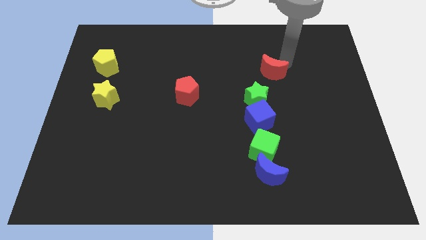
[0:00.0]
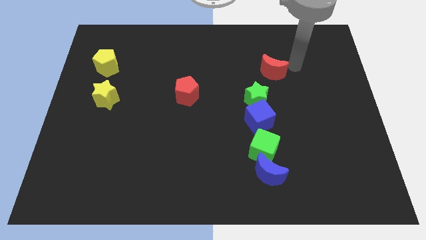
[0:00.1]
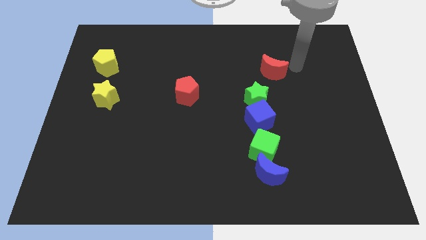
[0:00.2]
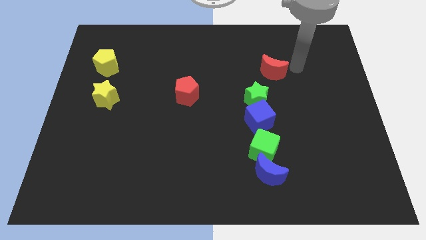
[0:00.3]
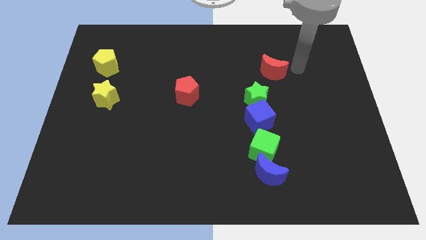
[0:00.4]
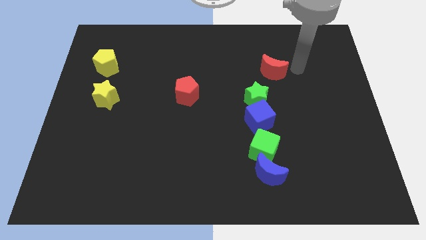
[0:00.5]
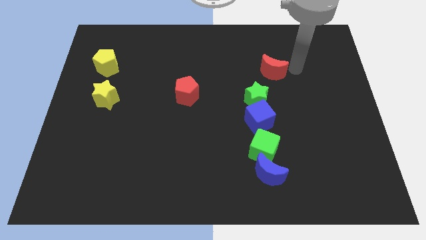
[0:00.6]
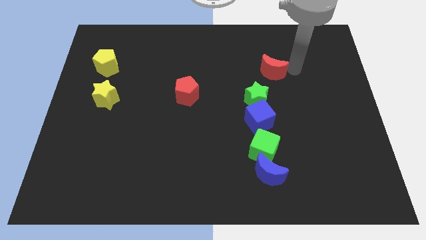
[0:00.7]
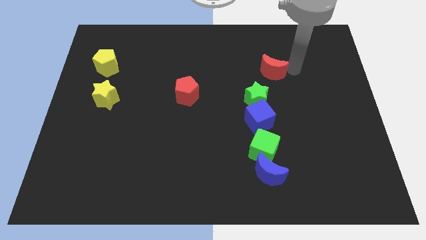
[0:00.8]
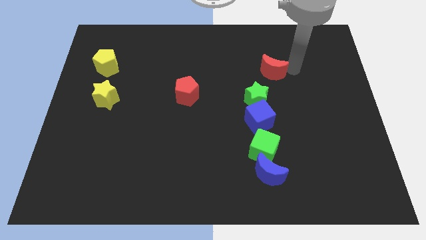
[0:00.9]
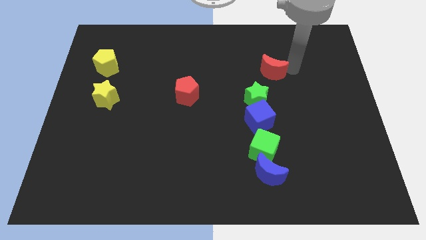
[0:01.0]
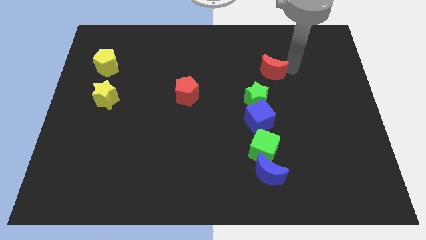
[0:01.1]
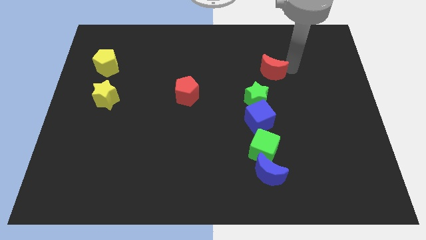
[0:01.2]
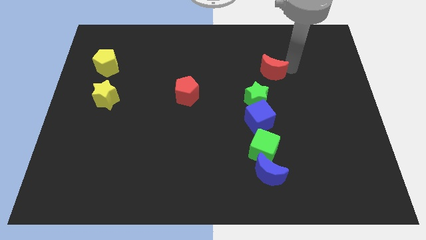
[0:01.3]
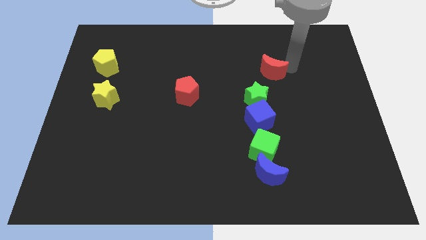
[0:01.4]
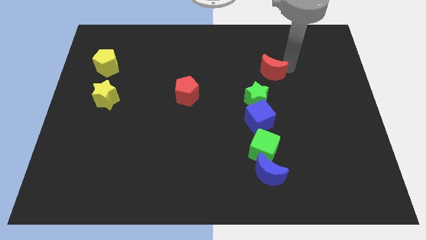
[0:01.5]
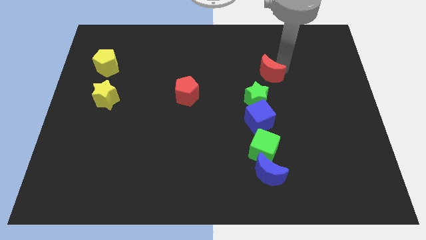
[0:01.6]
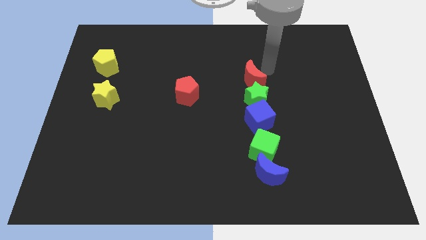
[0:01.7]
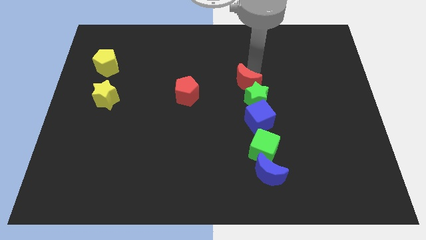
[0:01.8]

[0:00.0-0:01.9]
slide the red moon above the green star

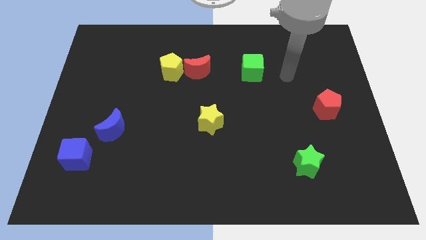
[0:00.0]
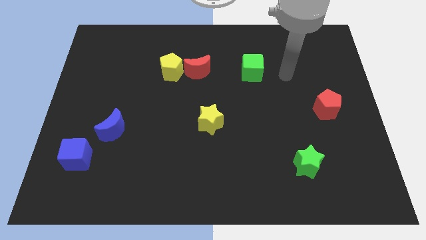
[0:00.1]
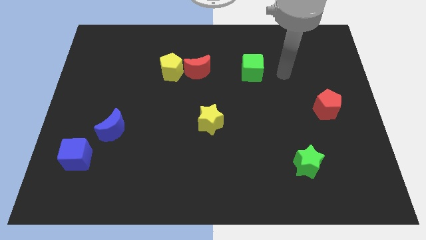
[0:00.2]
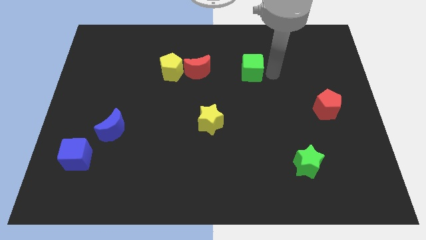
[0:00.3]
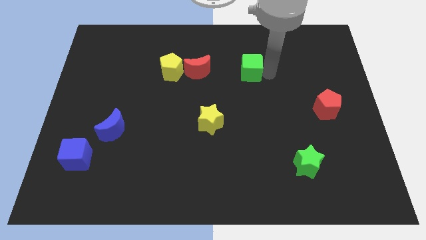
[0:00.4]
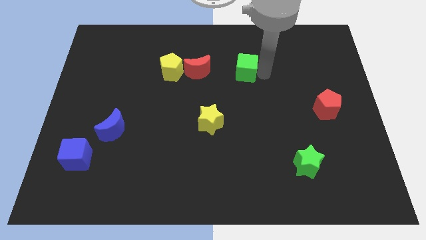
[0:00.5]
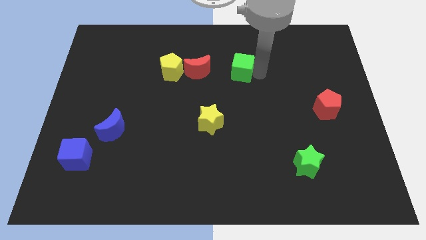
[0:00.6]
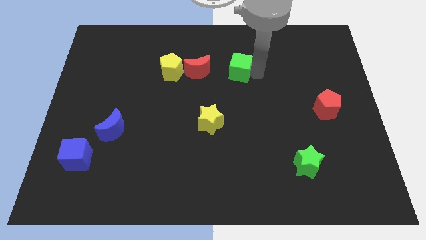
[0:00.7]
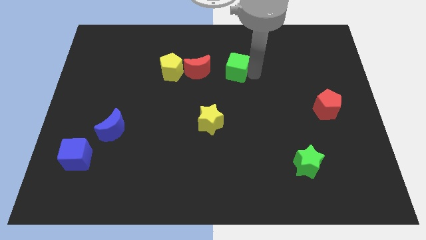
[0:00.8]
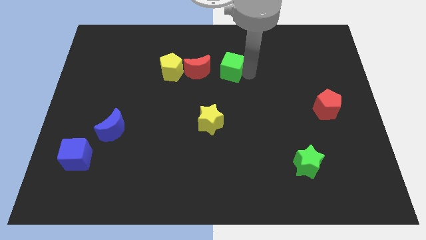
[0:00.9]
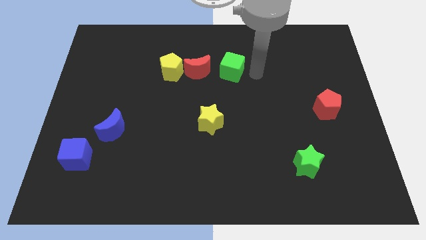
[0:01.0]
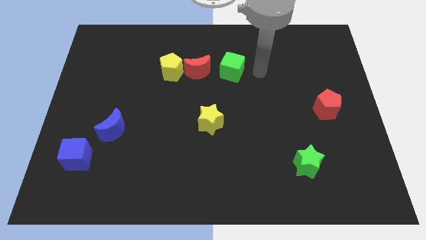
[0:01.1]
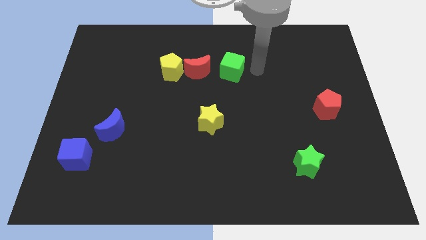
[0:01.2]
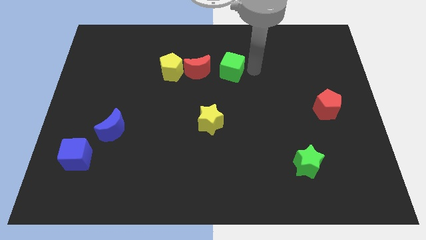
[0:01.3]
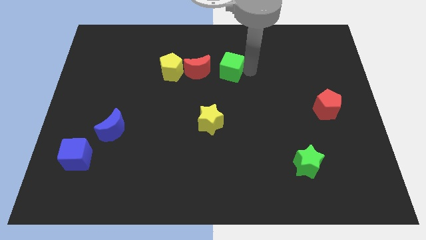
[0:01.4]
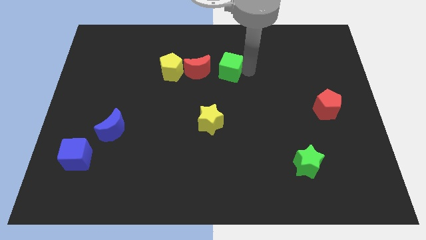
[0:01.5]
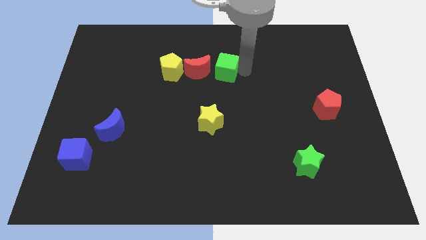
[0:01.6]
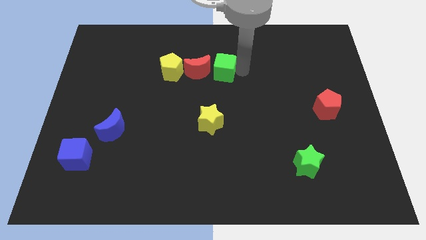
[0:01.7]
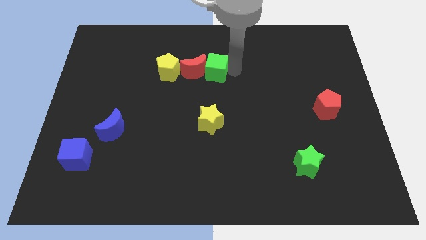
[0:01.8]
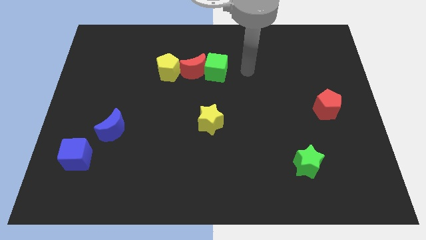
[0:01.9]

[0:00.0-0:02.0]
place the green cube beside the red moon

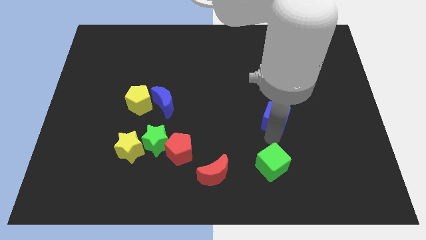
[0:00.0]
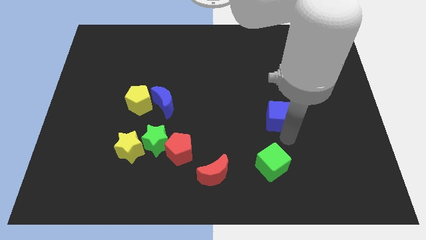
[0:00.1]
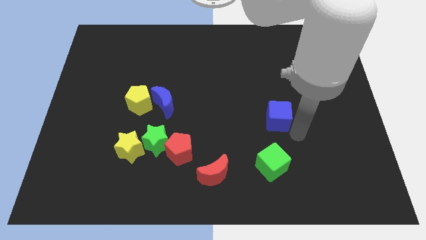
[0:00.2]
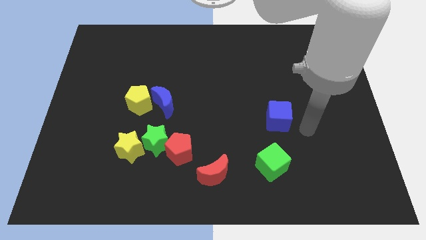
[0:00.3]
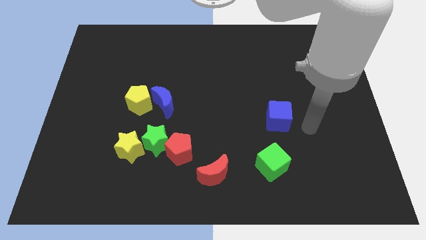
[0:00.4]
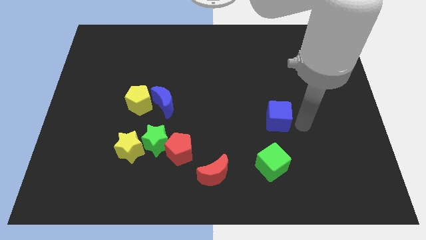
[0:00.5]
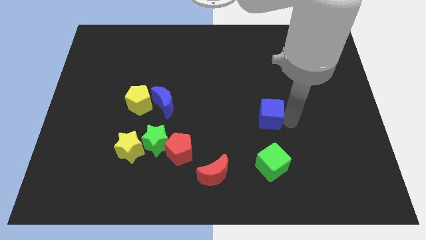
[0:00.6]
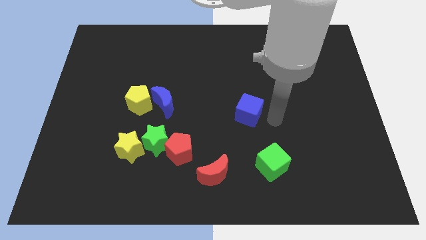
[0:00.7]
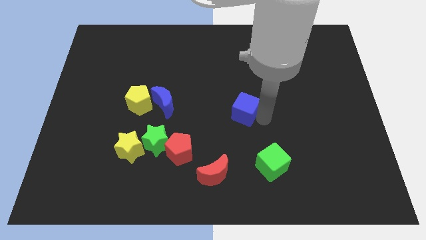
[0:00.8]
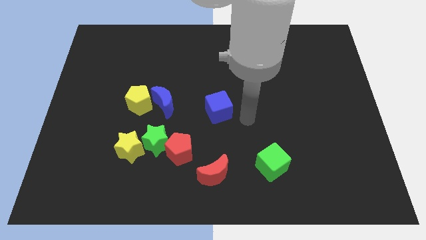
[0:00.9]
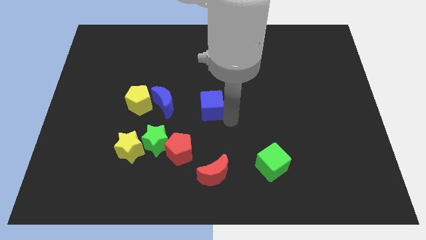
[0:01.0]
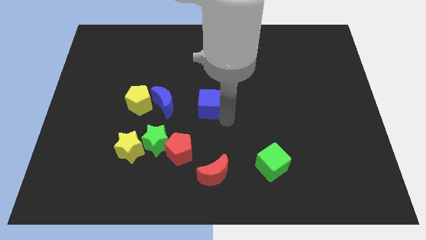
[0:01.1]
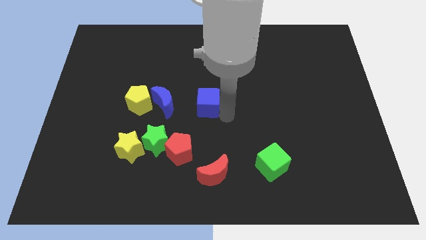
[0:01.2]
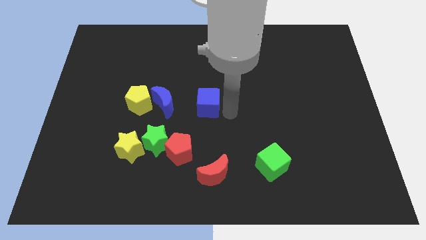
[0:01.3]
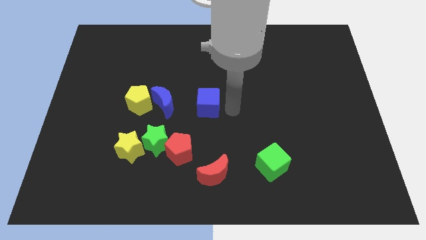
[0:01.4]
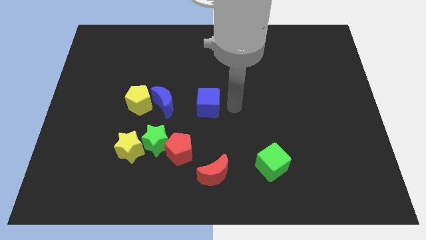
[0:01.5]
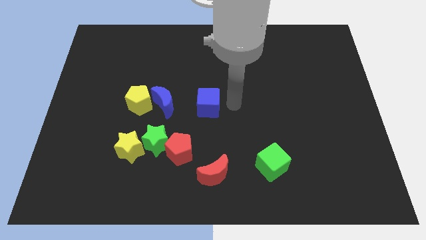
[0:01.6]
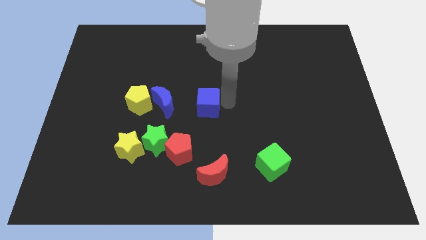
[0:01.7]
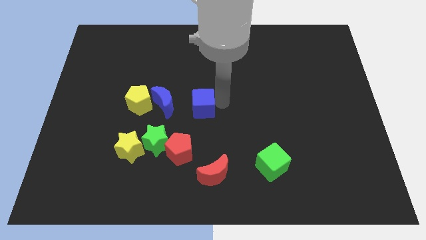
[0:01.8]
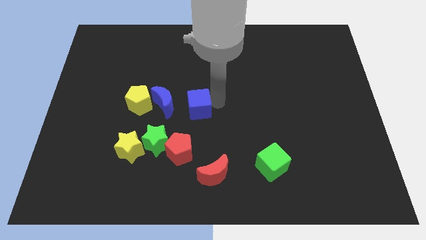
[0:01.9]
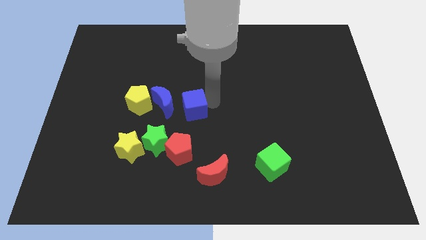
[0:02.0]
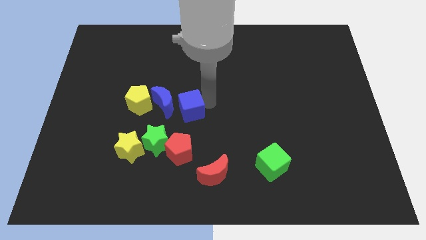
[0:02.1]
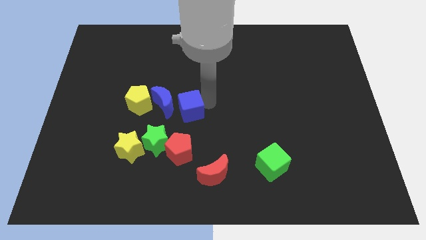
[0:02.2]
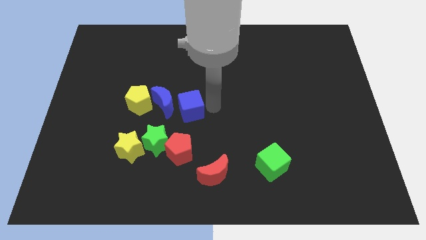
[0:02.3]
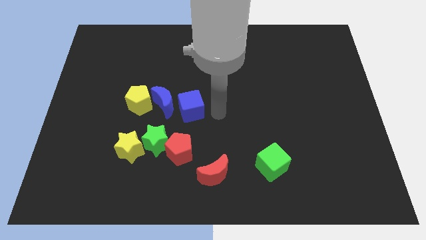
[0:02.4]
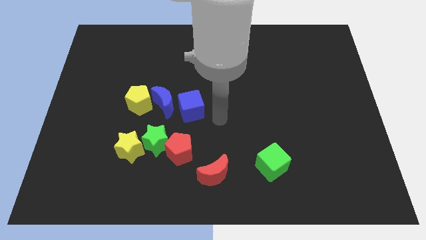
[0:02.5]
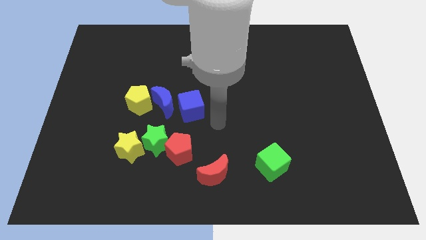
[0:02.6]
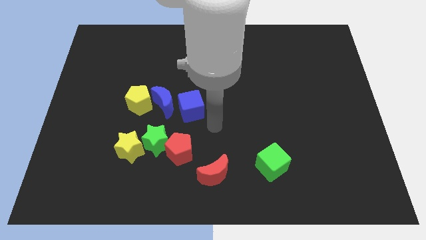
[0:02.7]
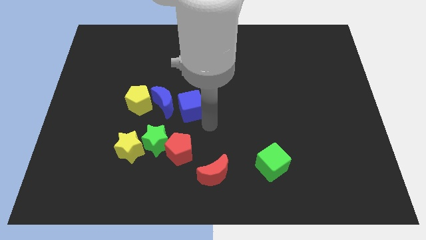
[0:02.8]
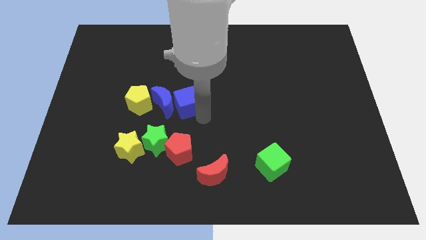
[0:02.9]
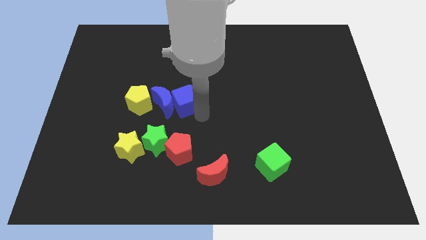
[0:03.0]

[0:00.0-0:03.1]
move the blue cube to the right of the blue moon

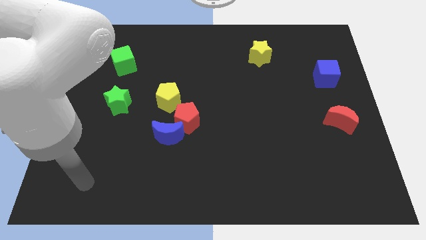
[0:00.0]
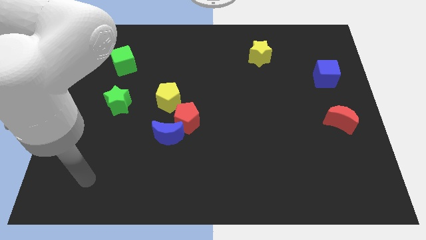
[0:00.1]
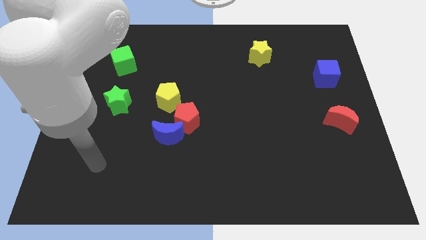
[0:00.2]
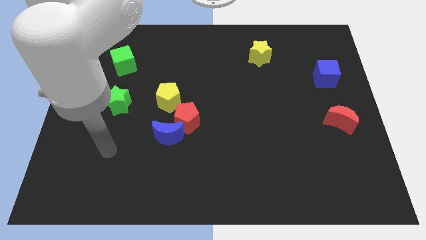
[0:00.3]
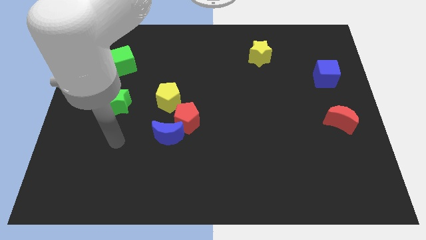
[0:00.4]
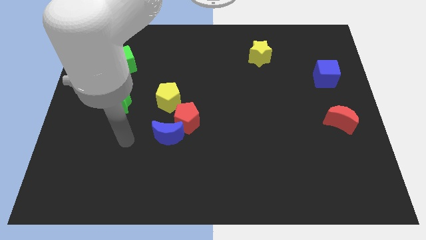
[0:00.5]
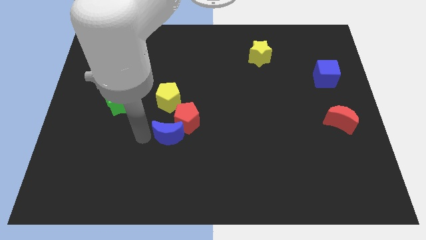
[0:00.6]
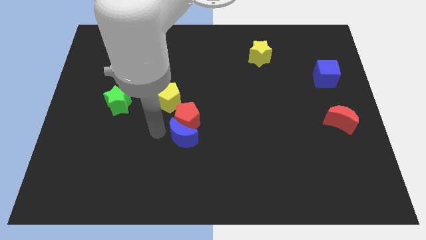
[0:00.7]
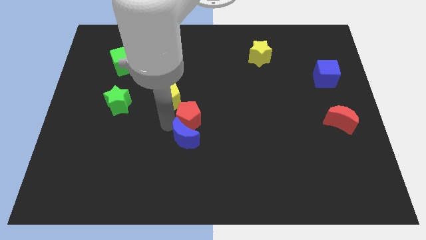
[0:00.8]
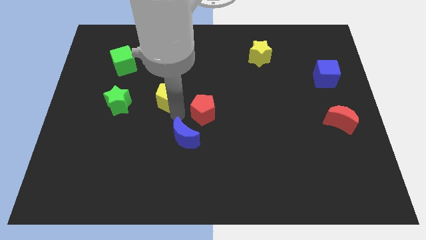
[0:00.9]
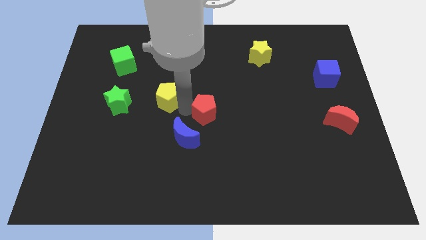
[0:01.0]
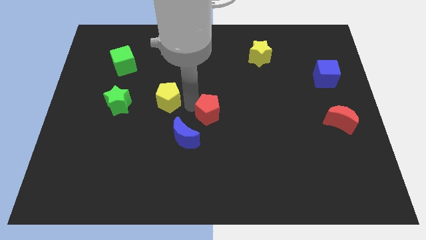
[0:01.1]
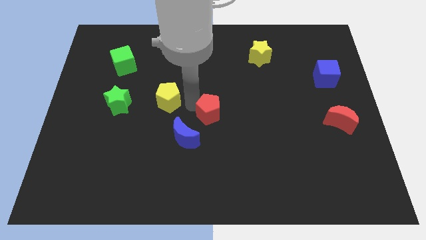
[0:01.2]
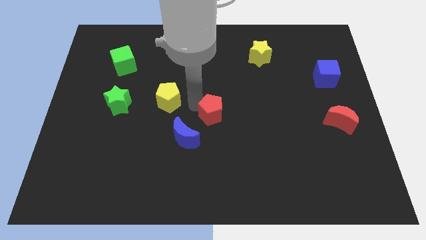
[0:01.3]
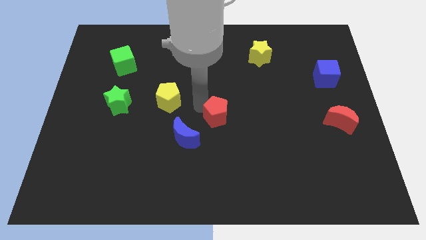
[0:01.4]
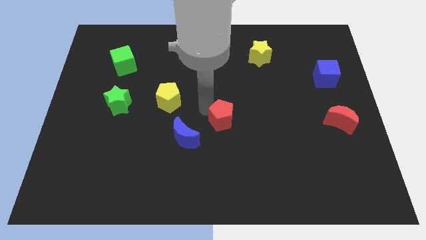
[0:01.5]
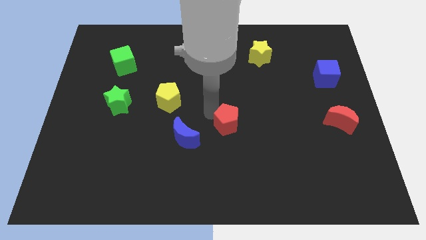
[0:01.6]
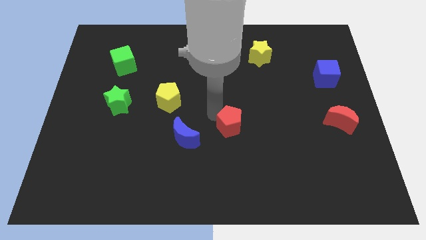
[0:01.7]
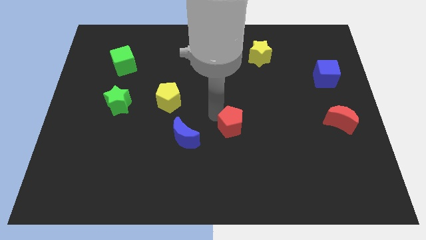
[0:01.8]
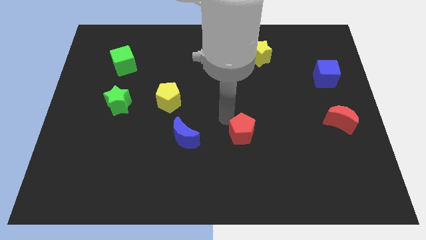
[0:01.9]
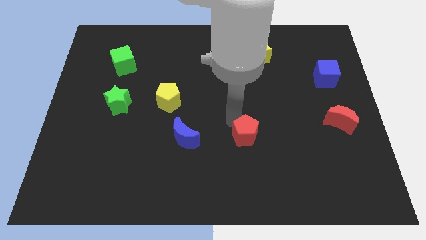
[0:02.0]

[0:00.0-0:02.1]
separate the blue crescent and the red pentagon
